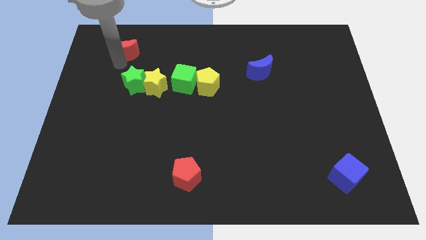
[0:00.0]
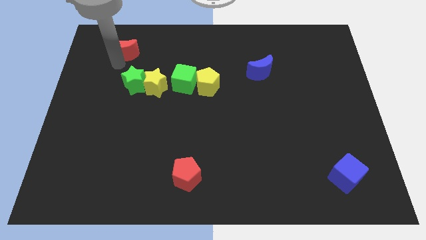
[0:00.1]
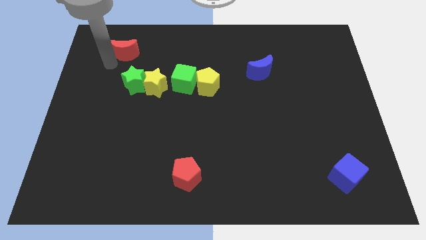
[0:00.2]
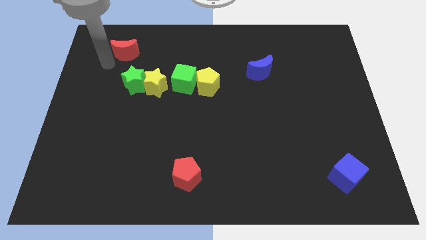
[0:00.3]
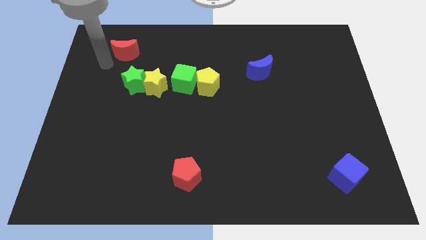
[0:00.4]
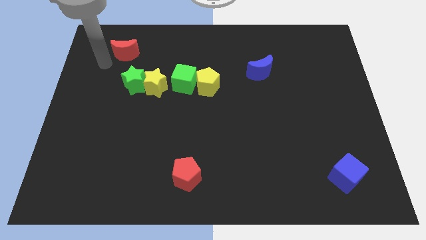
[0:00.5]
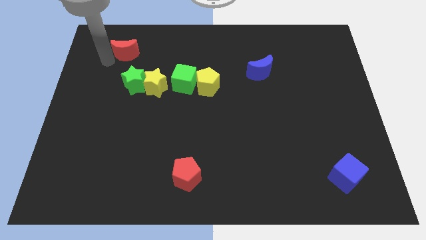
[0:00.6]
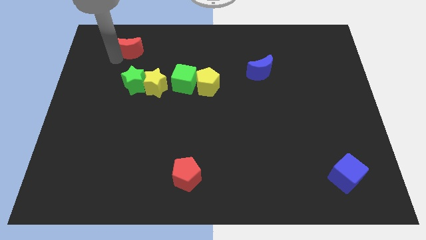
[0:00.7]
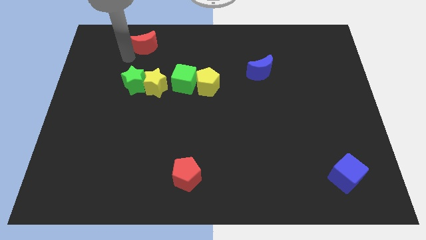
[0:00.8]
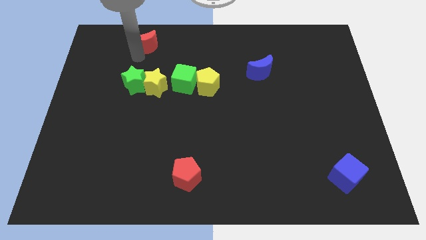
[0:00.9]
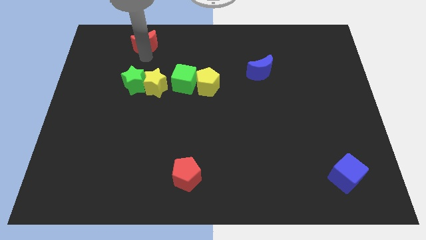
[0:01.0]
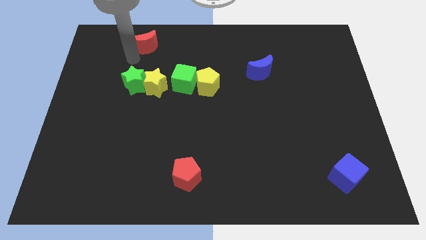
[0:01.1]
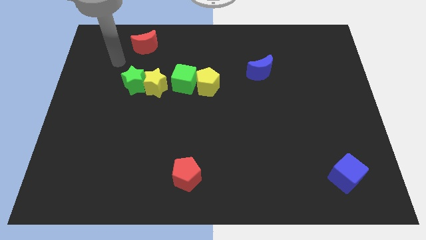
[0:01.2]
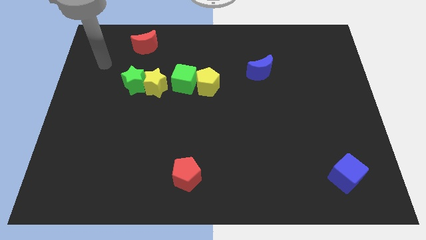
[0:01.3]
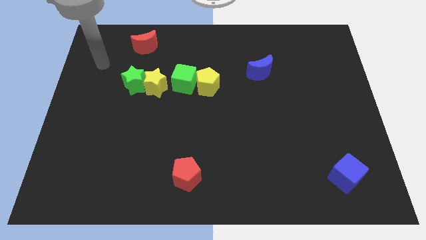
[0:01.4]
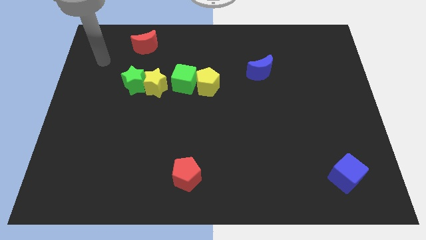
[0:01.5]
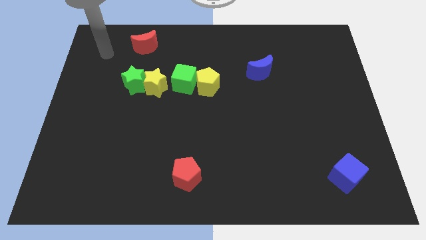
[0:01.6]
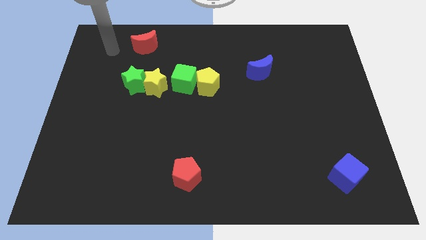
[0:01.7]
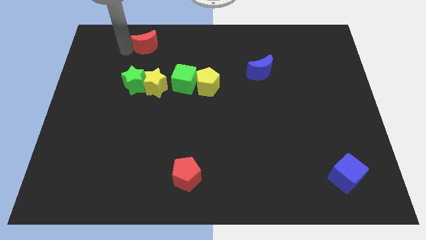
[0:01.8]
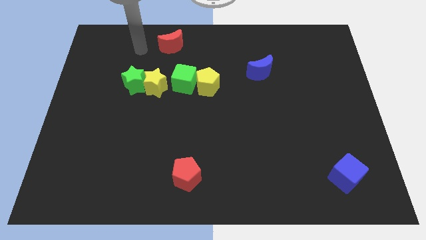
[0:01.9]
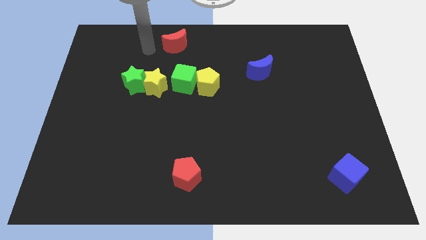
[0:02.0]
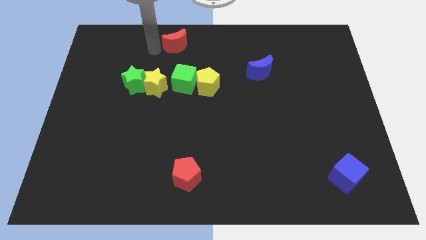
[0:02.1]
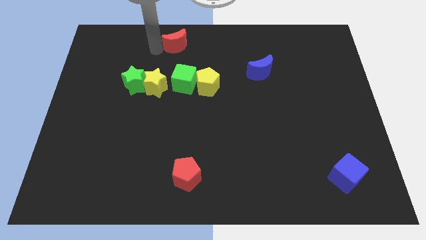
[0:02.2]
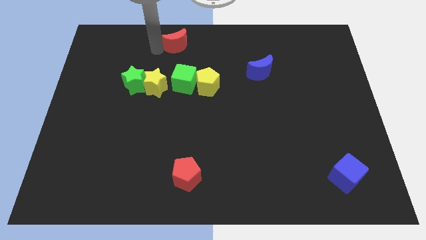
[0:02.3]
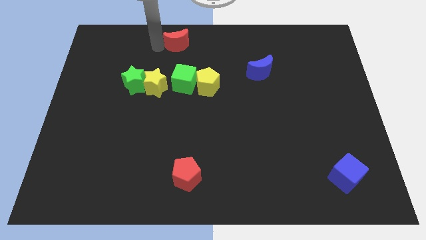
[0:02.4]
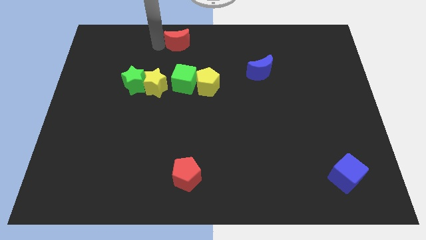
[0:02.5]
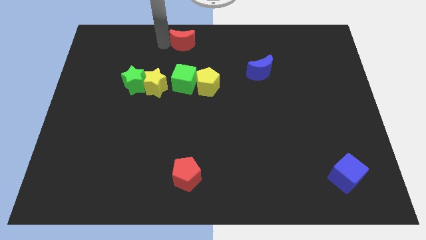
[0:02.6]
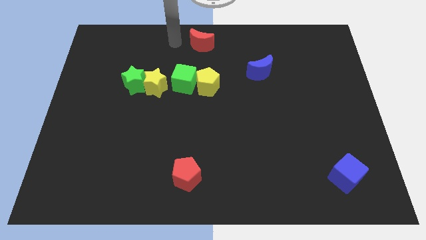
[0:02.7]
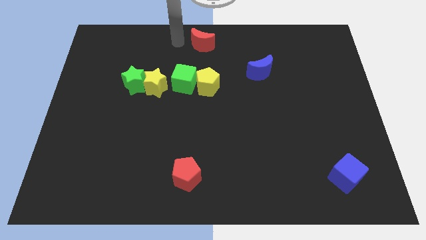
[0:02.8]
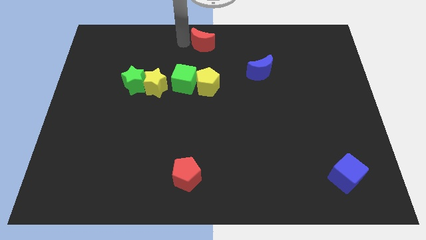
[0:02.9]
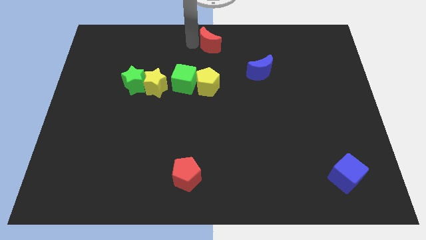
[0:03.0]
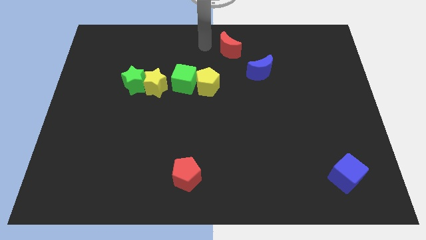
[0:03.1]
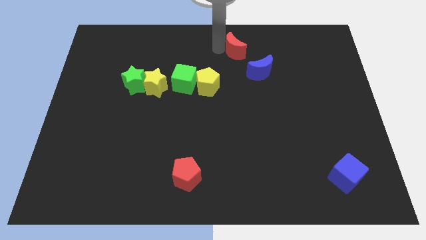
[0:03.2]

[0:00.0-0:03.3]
slide red crescent towards blue moon

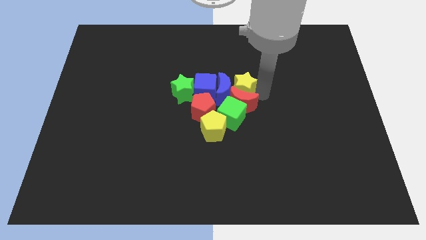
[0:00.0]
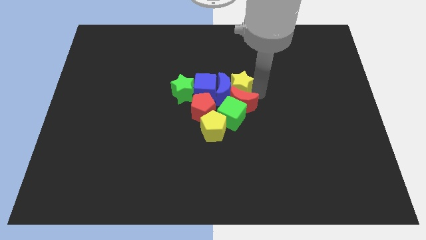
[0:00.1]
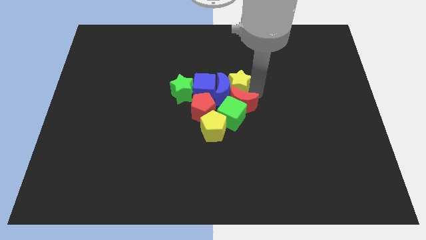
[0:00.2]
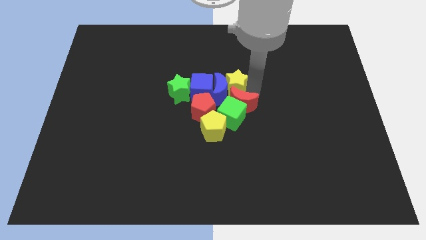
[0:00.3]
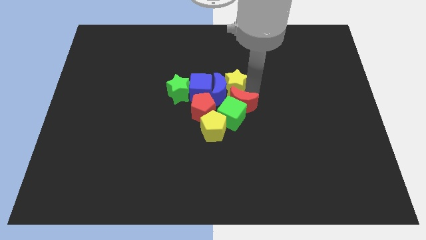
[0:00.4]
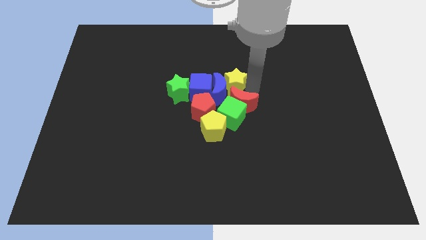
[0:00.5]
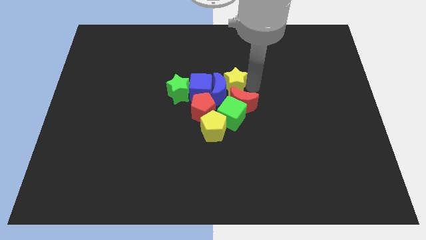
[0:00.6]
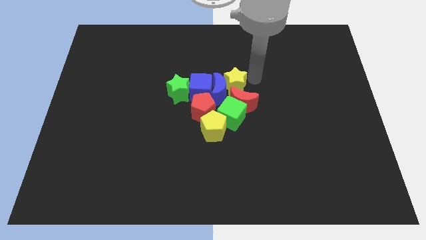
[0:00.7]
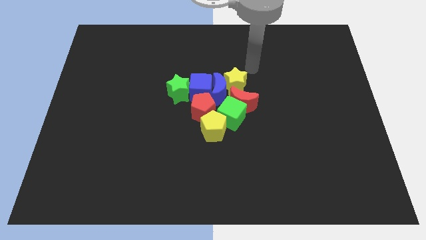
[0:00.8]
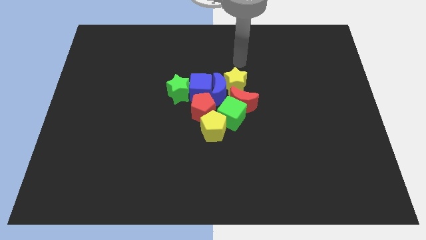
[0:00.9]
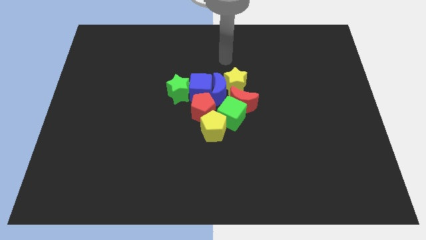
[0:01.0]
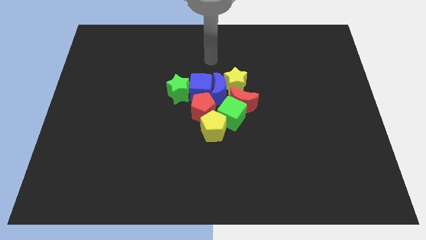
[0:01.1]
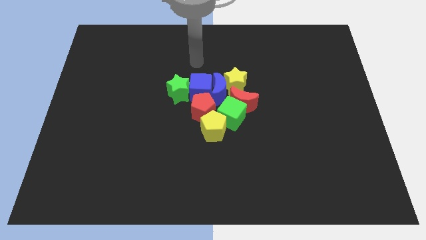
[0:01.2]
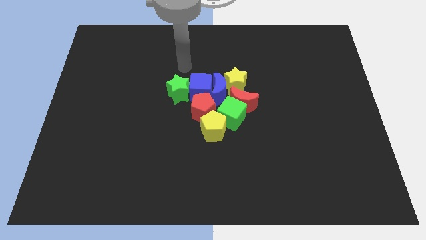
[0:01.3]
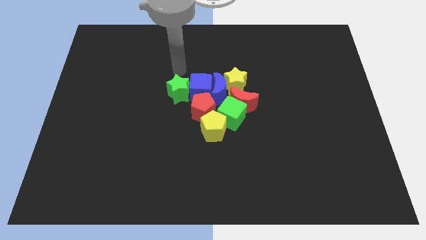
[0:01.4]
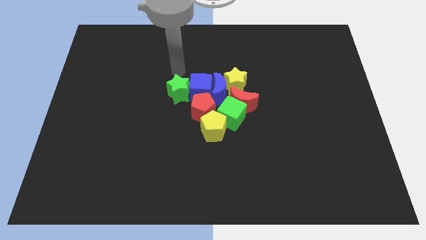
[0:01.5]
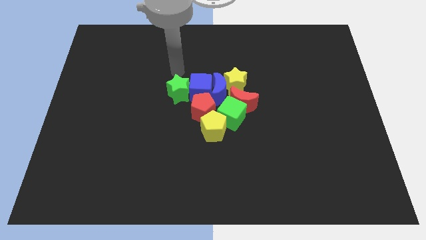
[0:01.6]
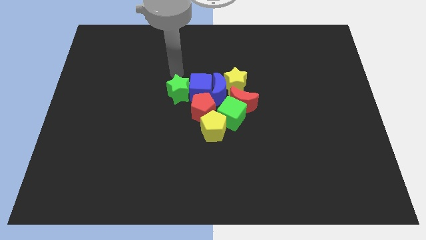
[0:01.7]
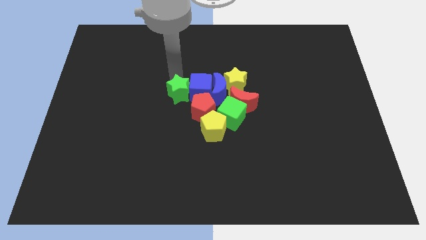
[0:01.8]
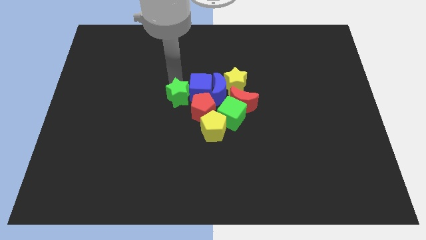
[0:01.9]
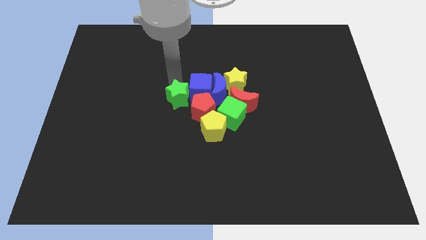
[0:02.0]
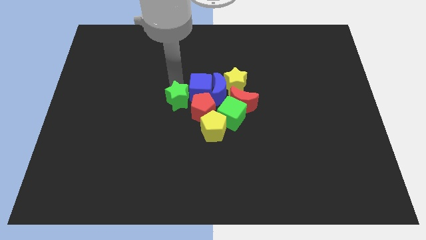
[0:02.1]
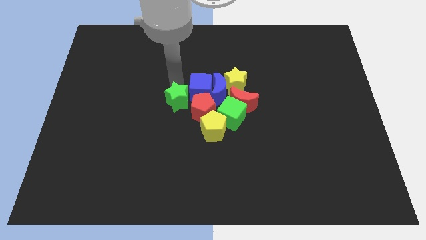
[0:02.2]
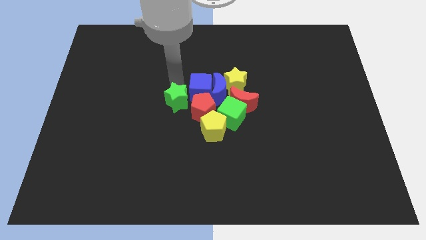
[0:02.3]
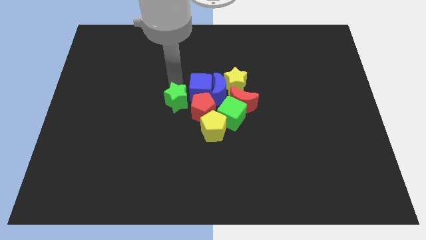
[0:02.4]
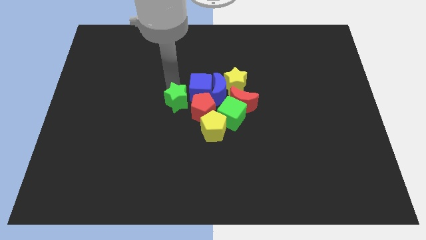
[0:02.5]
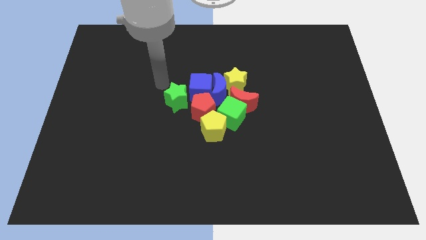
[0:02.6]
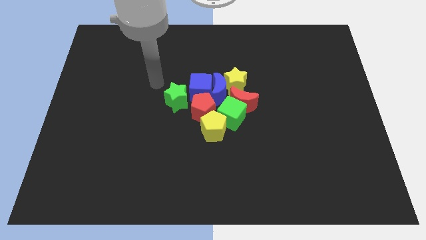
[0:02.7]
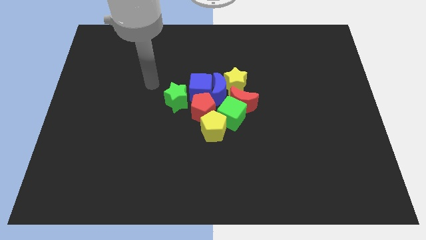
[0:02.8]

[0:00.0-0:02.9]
slightly push the geen star downward

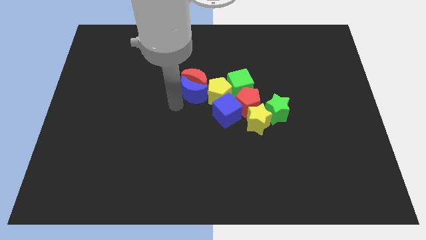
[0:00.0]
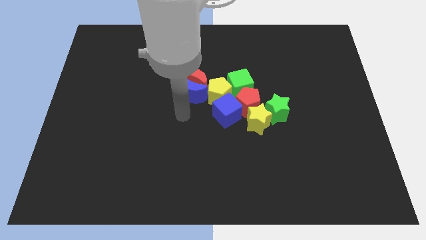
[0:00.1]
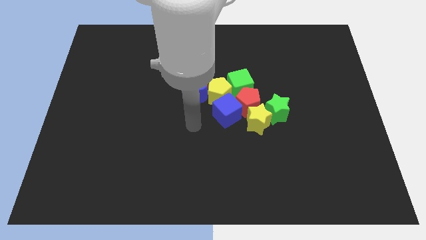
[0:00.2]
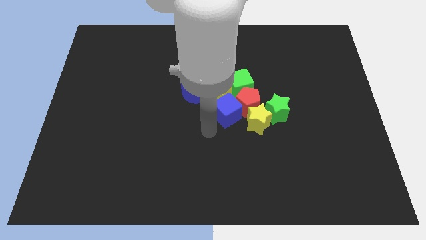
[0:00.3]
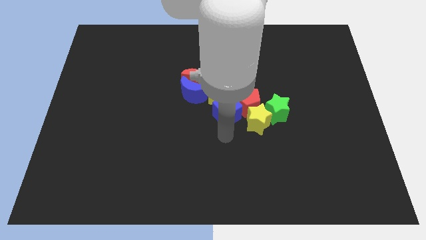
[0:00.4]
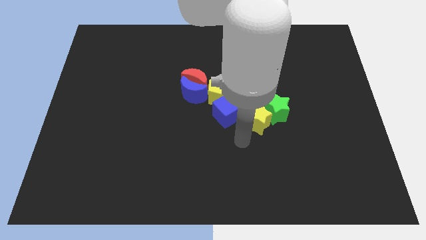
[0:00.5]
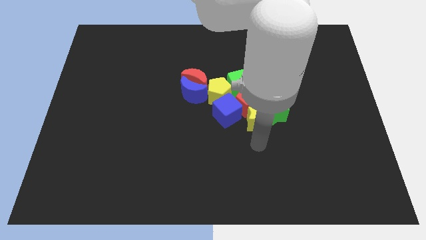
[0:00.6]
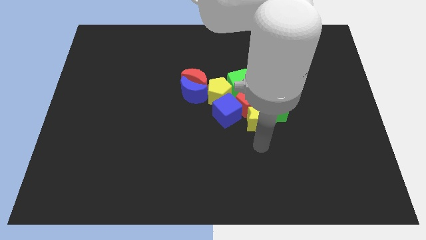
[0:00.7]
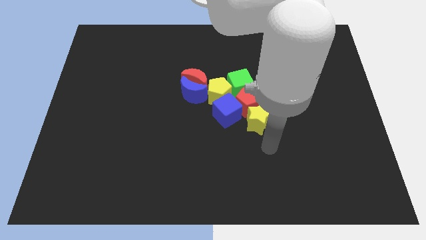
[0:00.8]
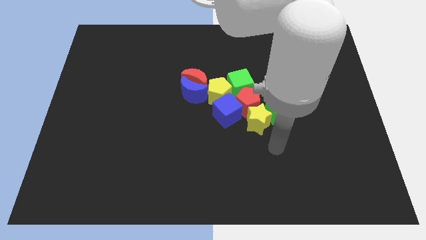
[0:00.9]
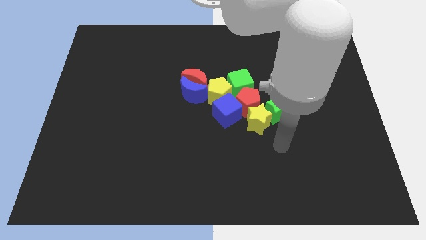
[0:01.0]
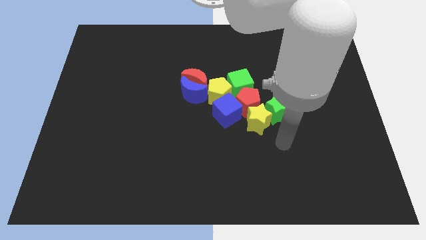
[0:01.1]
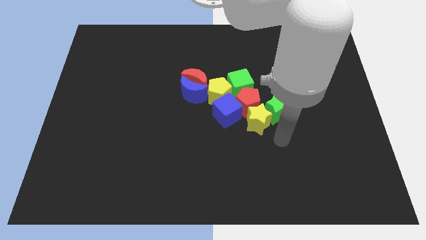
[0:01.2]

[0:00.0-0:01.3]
move your arm from blue crescent to yellow star

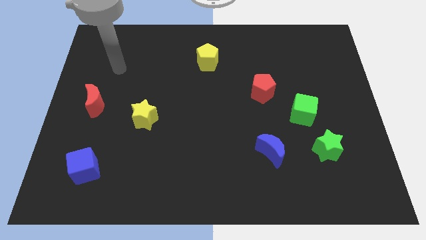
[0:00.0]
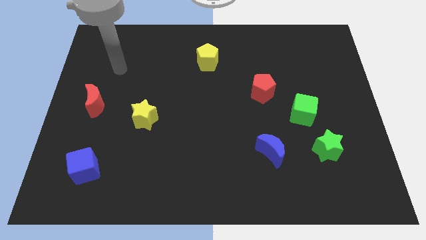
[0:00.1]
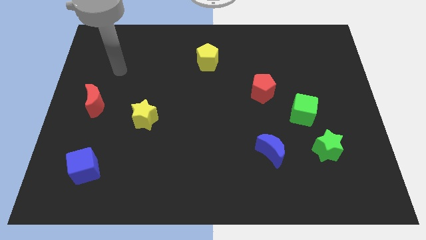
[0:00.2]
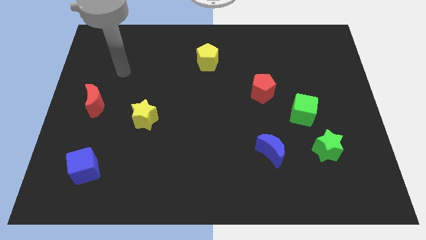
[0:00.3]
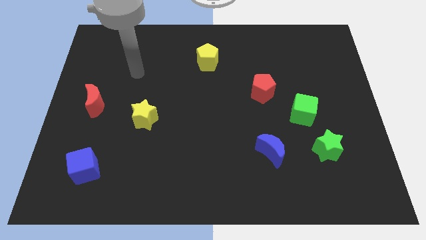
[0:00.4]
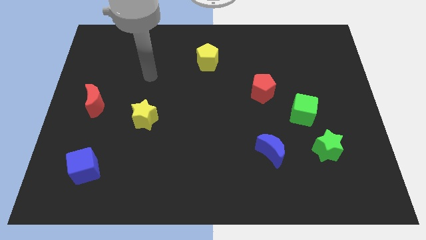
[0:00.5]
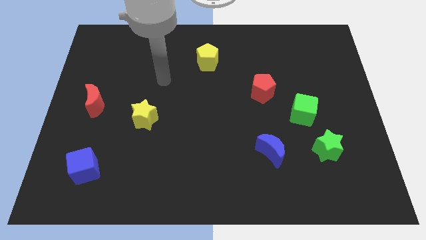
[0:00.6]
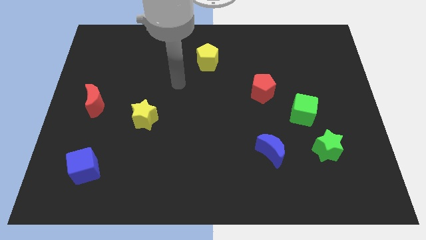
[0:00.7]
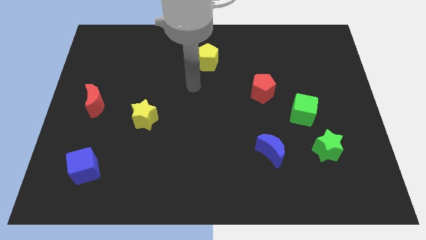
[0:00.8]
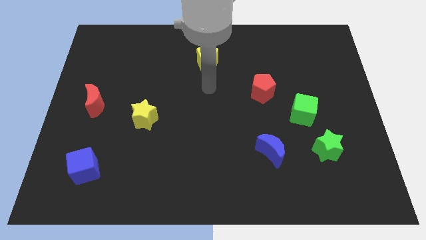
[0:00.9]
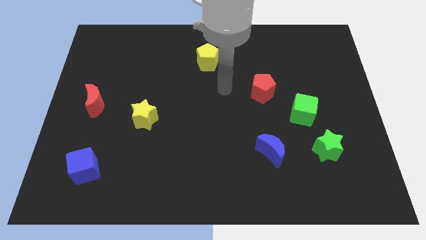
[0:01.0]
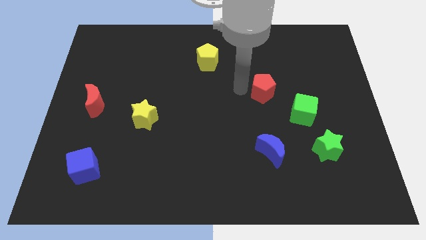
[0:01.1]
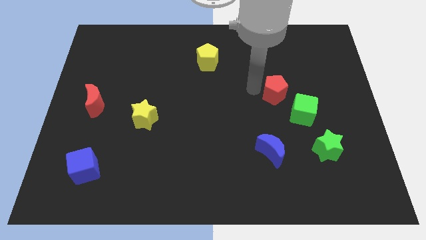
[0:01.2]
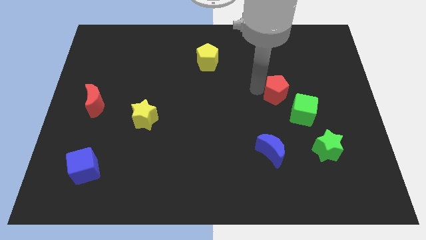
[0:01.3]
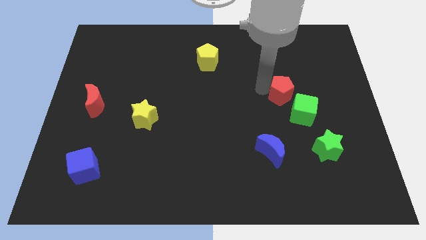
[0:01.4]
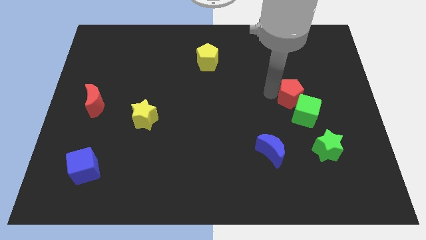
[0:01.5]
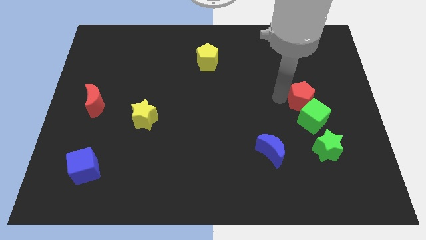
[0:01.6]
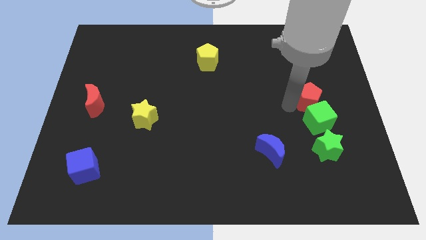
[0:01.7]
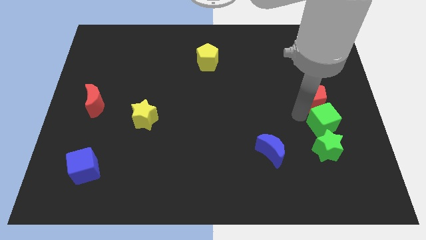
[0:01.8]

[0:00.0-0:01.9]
push the red pentagon into the green cube
